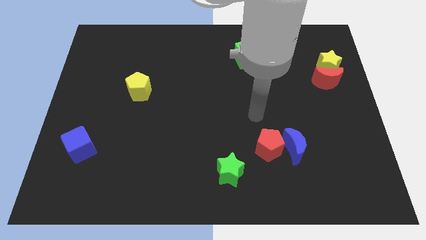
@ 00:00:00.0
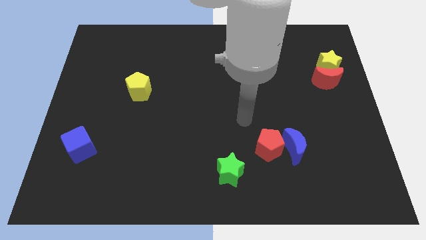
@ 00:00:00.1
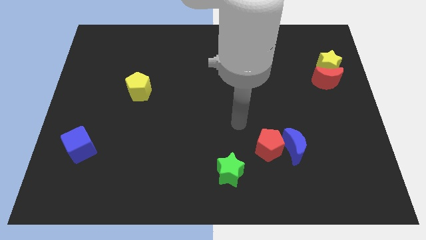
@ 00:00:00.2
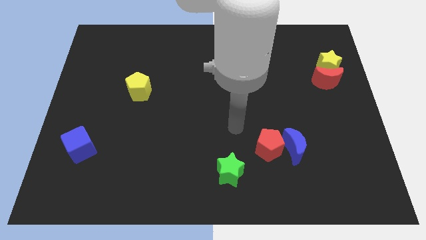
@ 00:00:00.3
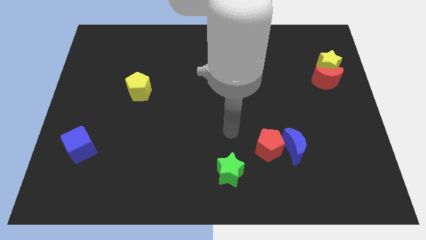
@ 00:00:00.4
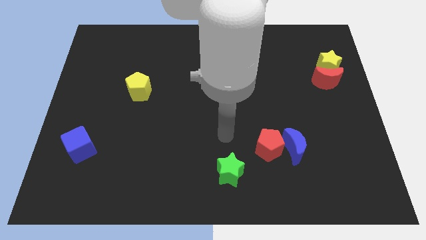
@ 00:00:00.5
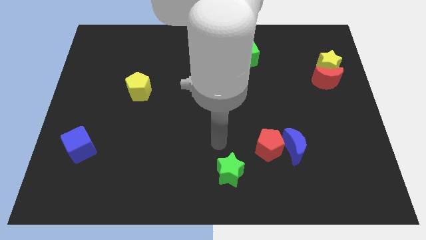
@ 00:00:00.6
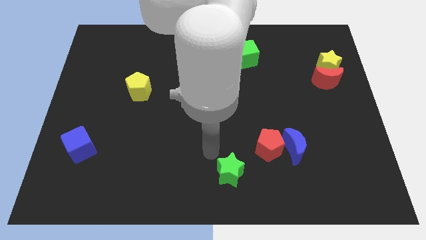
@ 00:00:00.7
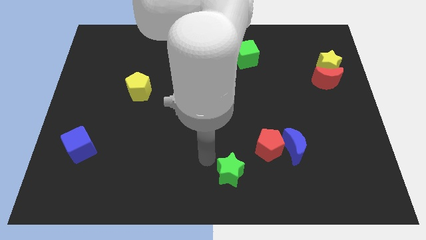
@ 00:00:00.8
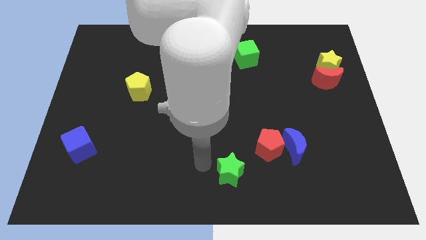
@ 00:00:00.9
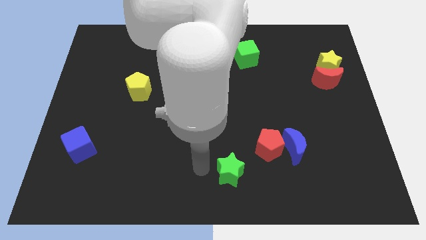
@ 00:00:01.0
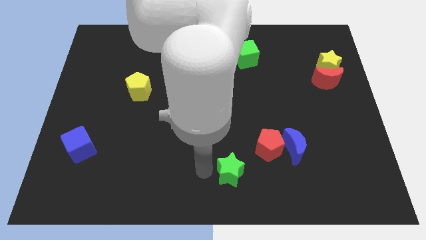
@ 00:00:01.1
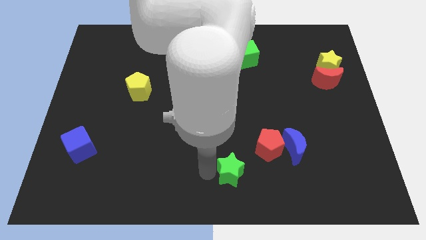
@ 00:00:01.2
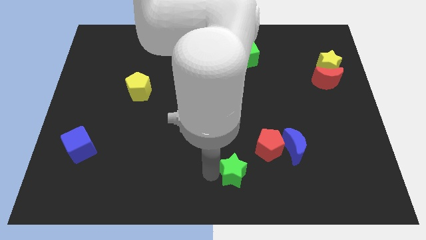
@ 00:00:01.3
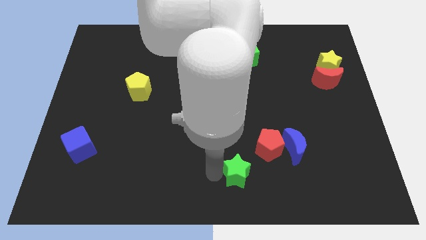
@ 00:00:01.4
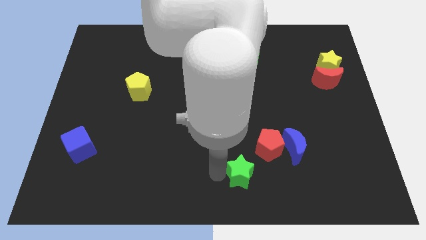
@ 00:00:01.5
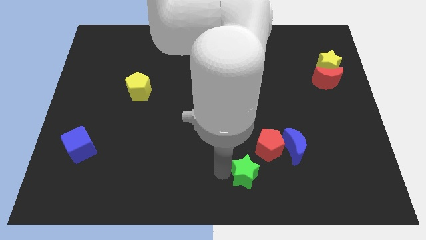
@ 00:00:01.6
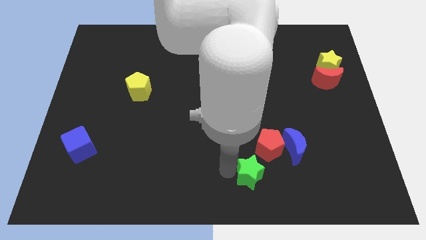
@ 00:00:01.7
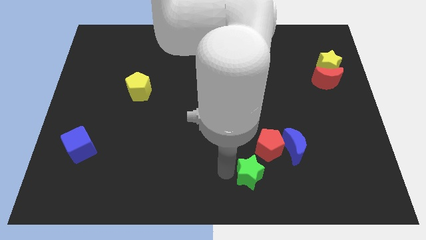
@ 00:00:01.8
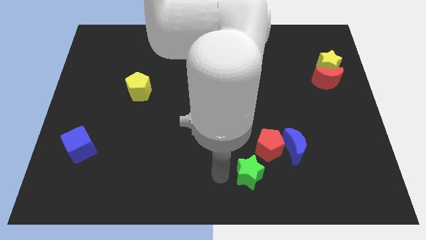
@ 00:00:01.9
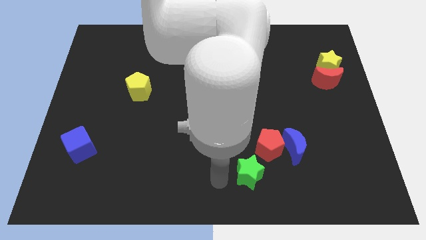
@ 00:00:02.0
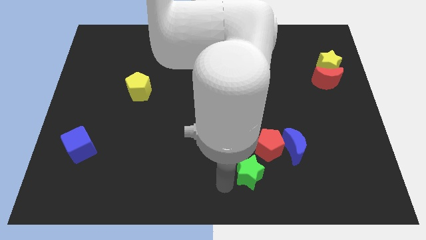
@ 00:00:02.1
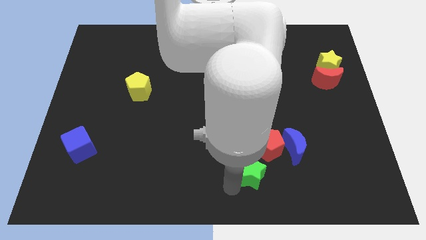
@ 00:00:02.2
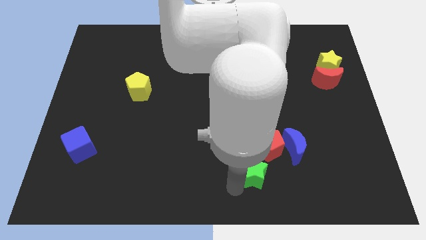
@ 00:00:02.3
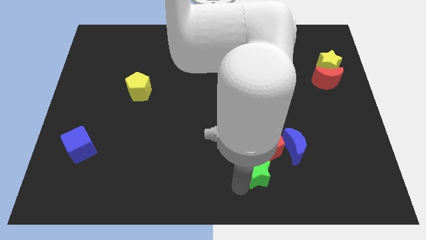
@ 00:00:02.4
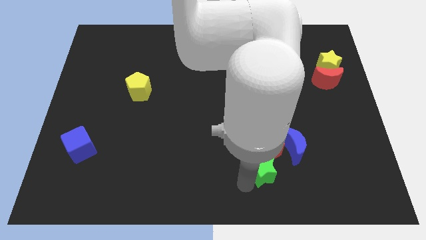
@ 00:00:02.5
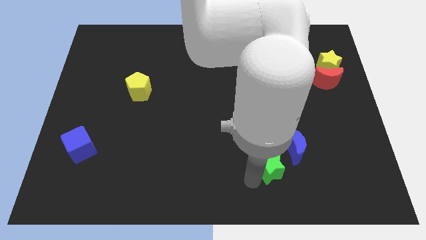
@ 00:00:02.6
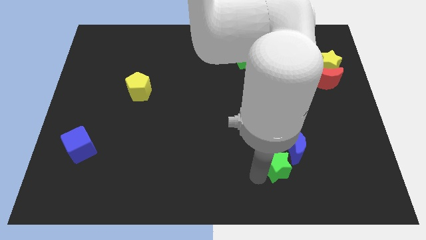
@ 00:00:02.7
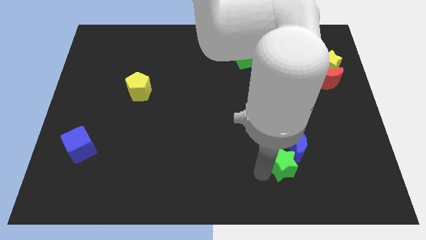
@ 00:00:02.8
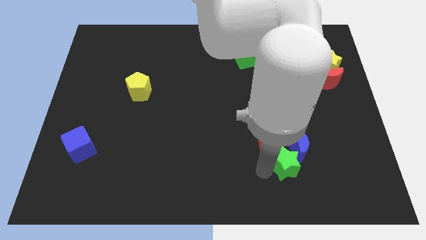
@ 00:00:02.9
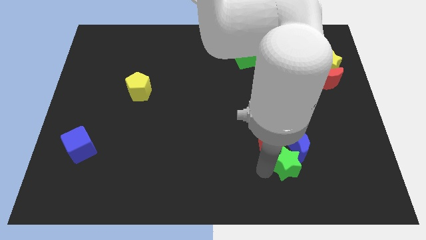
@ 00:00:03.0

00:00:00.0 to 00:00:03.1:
push the green star into the blue crescent

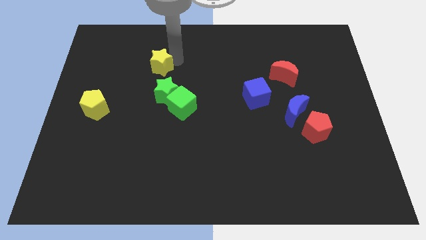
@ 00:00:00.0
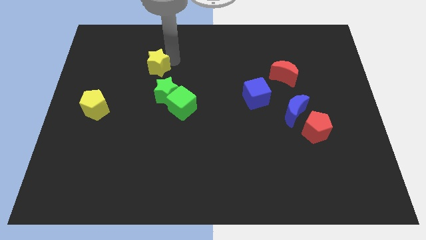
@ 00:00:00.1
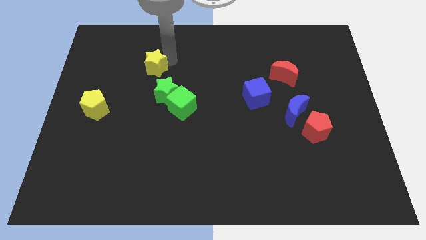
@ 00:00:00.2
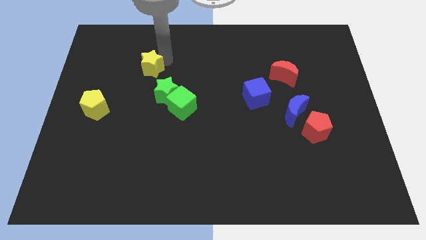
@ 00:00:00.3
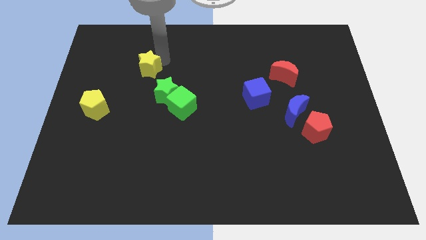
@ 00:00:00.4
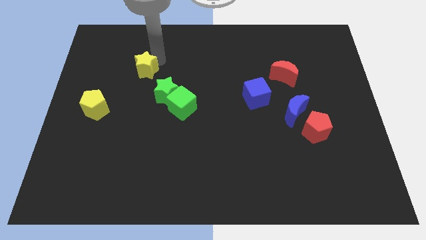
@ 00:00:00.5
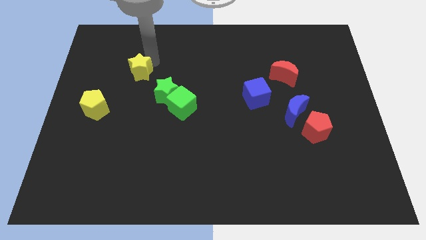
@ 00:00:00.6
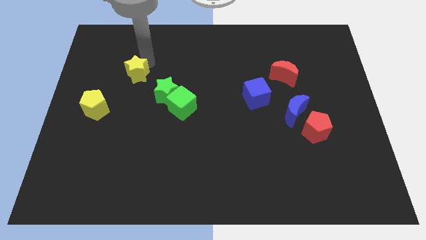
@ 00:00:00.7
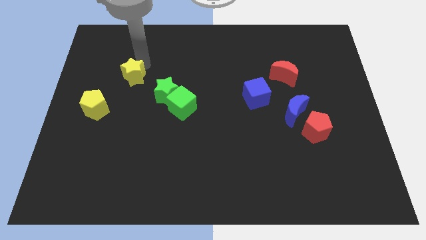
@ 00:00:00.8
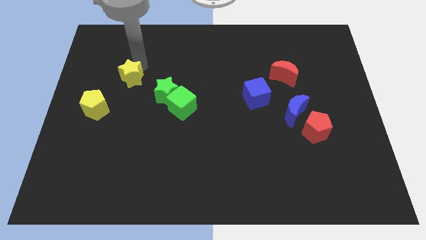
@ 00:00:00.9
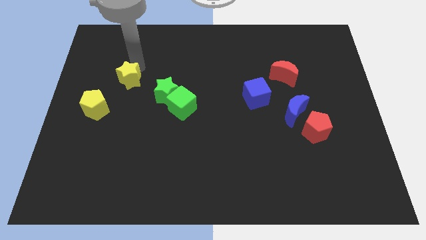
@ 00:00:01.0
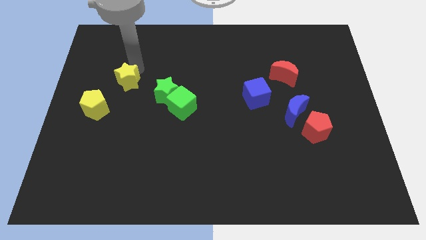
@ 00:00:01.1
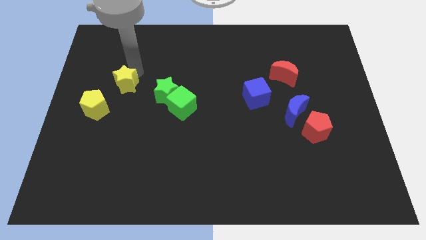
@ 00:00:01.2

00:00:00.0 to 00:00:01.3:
move the yellow star towards the top right of the yellow pentagon

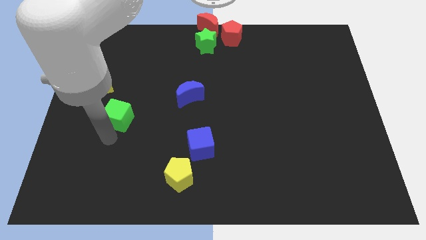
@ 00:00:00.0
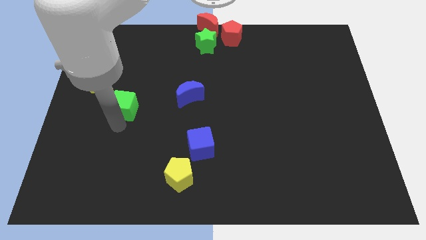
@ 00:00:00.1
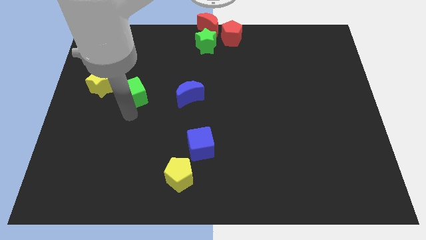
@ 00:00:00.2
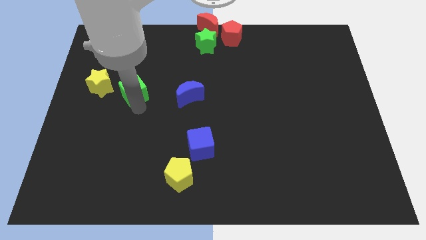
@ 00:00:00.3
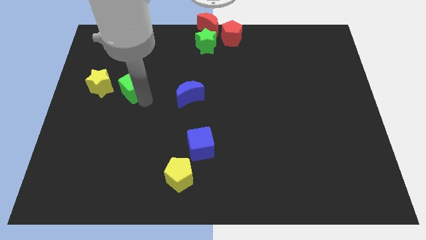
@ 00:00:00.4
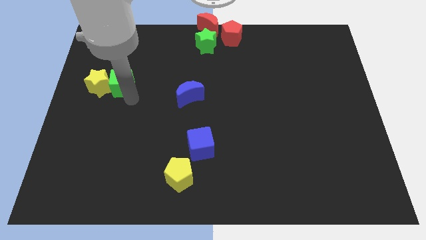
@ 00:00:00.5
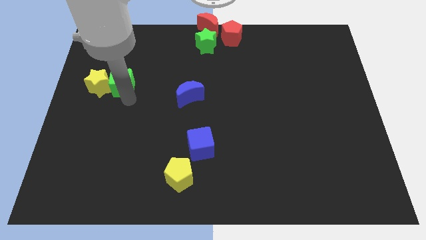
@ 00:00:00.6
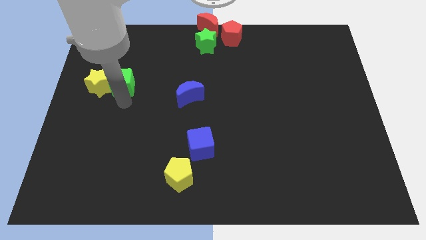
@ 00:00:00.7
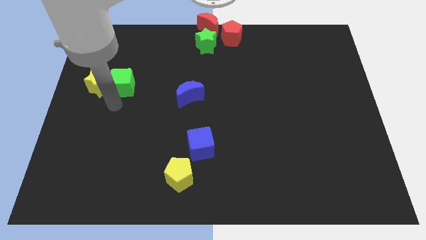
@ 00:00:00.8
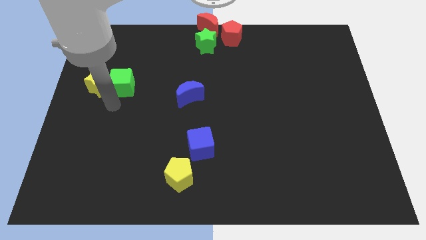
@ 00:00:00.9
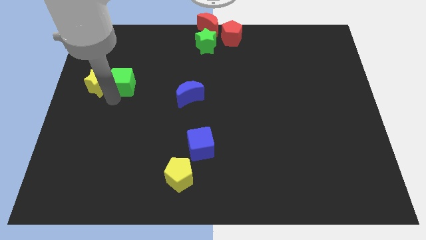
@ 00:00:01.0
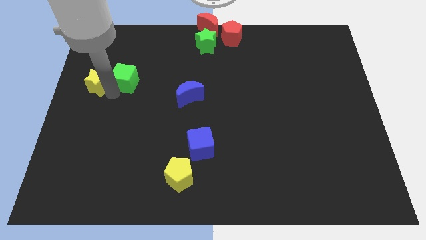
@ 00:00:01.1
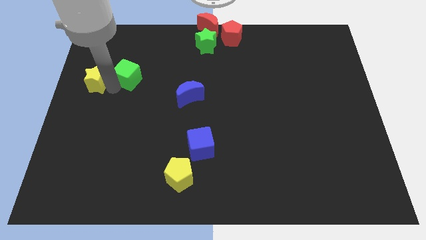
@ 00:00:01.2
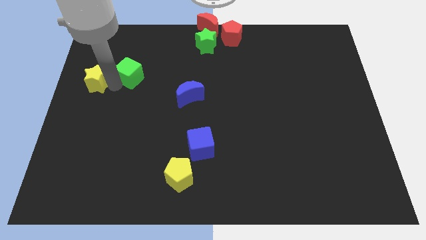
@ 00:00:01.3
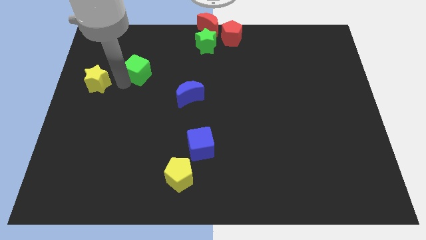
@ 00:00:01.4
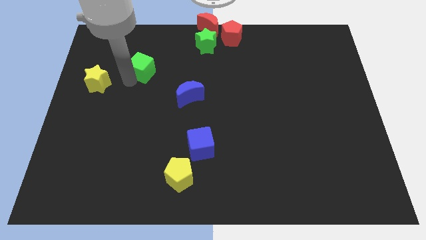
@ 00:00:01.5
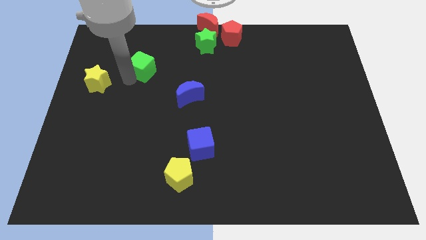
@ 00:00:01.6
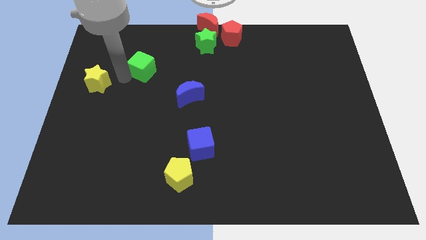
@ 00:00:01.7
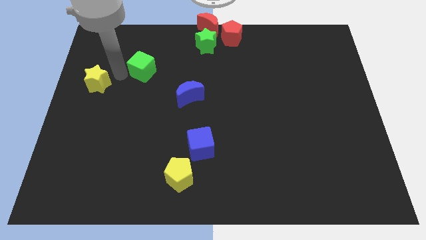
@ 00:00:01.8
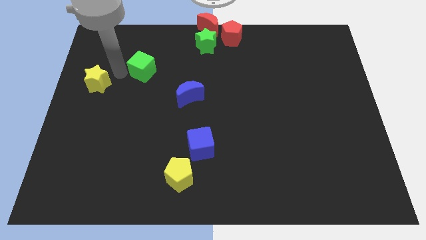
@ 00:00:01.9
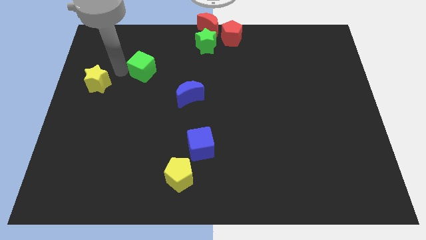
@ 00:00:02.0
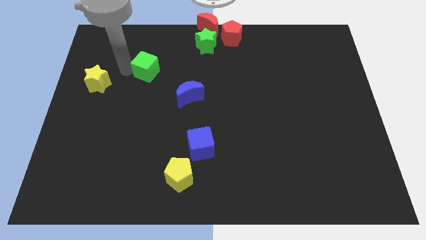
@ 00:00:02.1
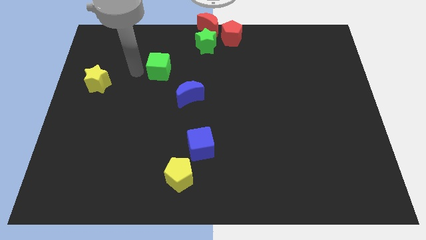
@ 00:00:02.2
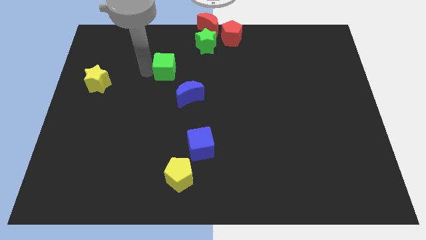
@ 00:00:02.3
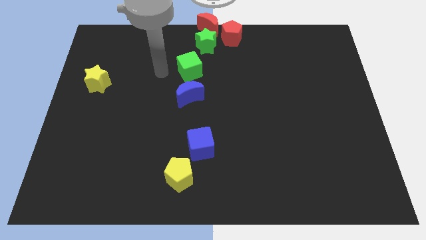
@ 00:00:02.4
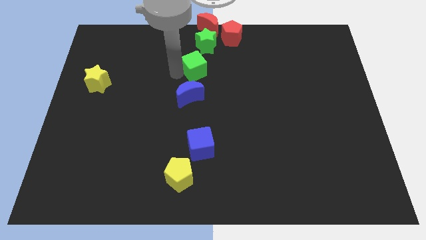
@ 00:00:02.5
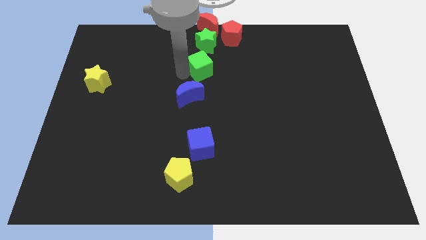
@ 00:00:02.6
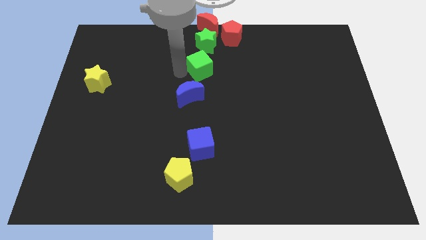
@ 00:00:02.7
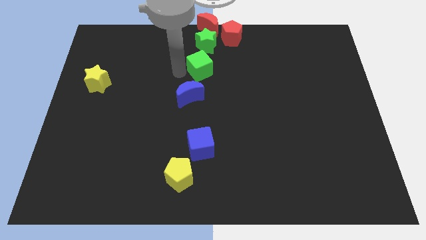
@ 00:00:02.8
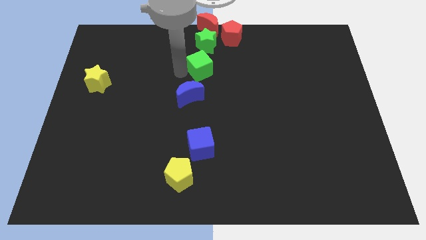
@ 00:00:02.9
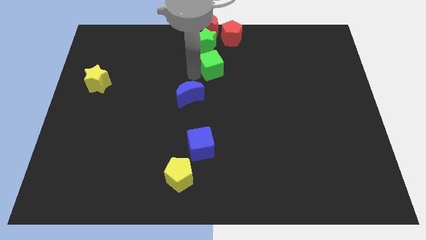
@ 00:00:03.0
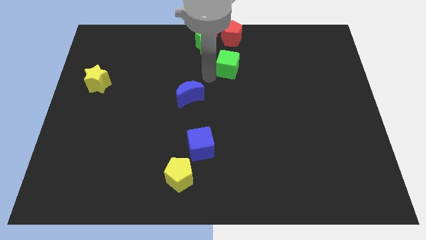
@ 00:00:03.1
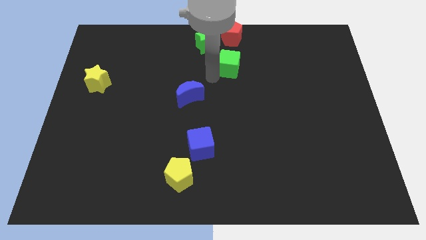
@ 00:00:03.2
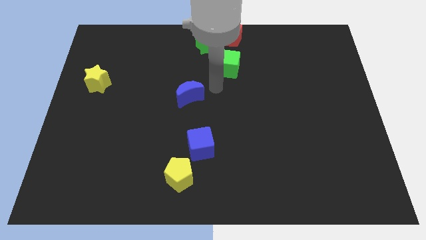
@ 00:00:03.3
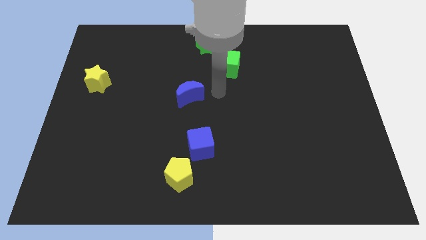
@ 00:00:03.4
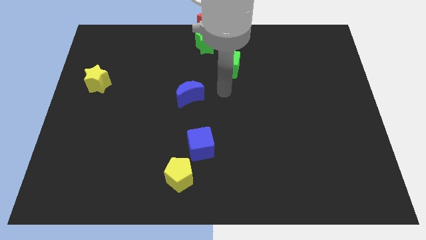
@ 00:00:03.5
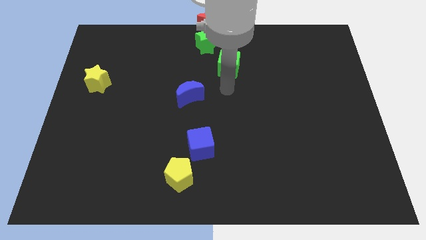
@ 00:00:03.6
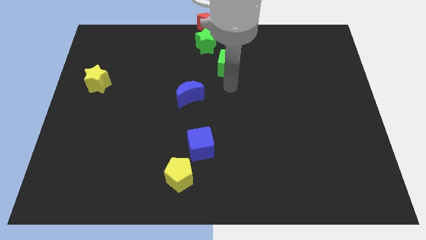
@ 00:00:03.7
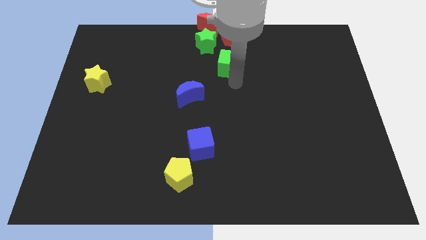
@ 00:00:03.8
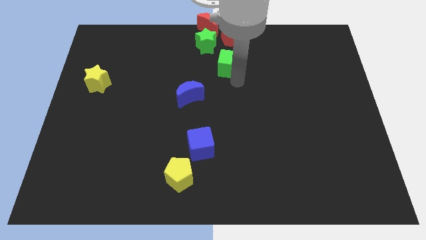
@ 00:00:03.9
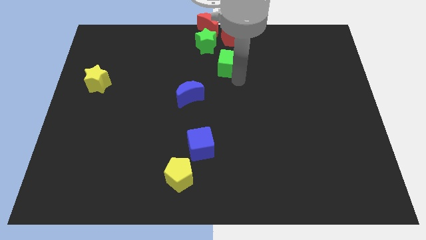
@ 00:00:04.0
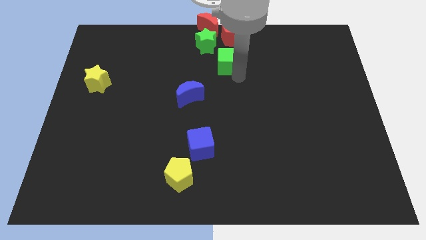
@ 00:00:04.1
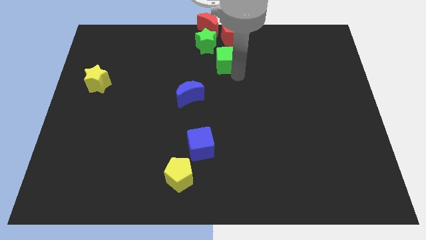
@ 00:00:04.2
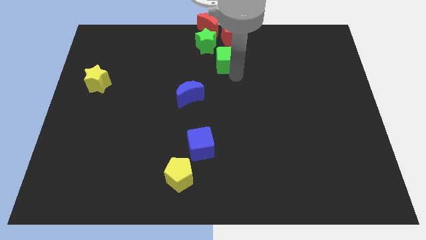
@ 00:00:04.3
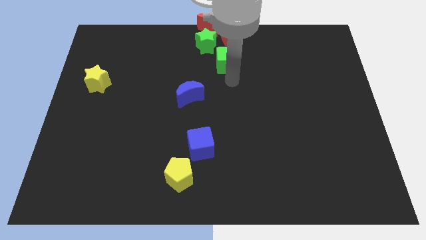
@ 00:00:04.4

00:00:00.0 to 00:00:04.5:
place the green cube towards the bottom of the red pentagon
